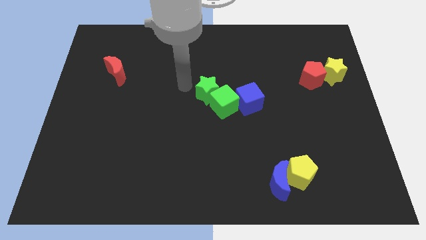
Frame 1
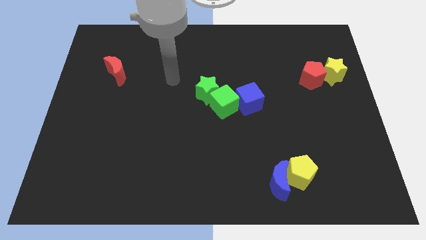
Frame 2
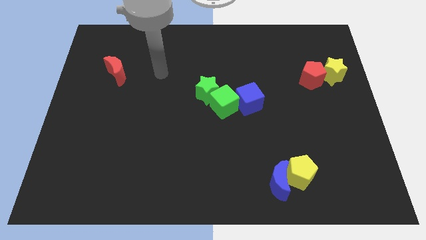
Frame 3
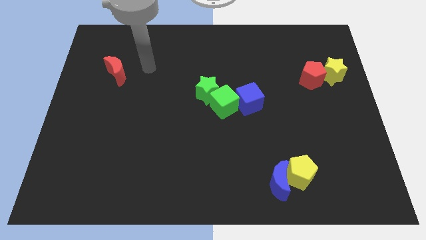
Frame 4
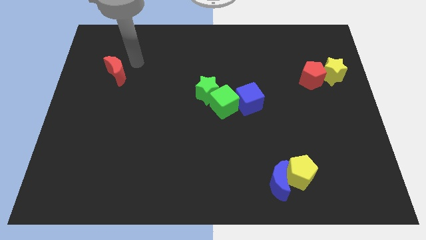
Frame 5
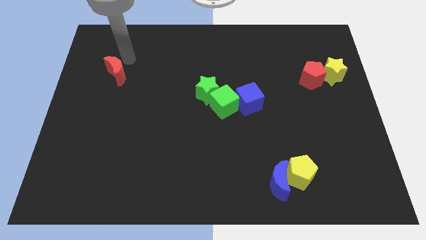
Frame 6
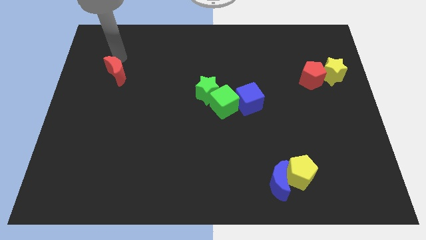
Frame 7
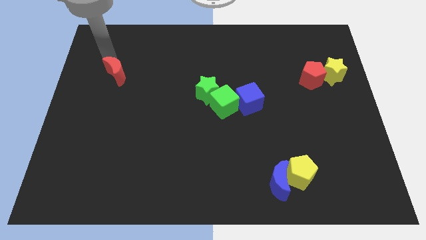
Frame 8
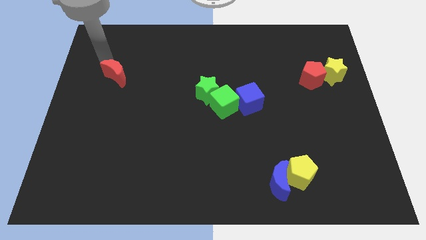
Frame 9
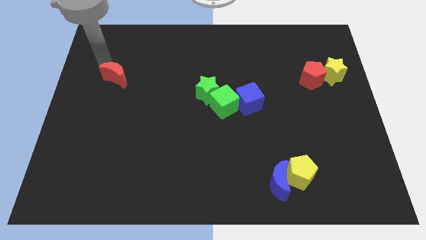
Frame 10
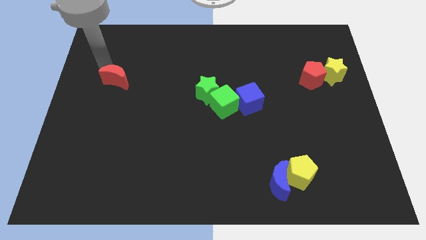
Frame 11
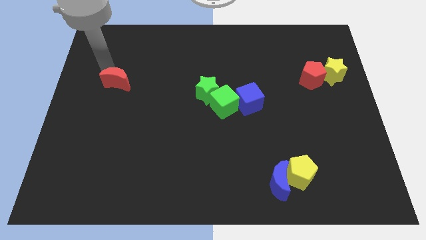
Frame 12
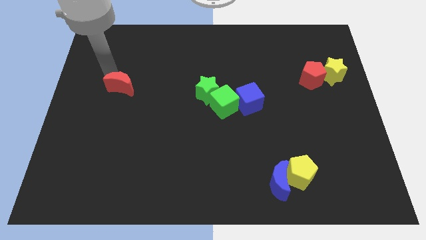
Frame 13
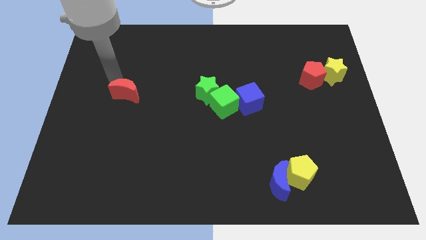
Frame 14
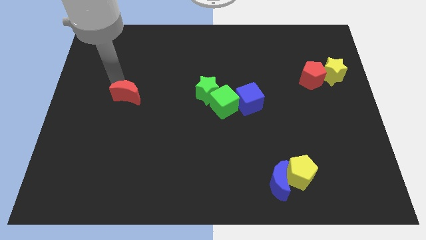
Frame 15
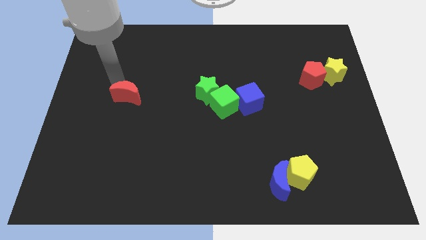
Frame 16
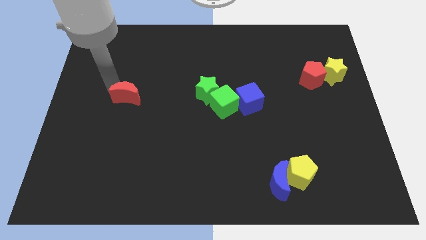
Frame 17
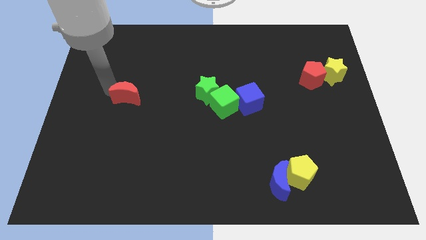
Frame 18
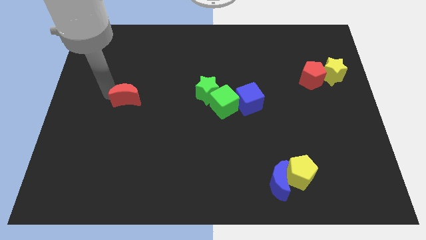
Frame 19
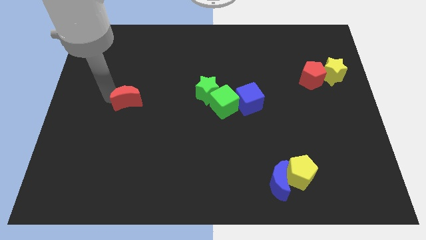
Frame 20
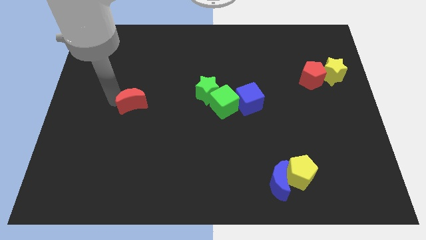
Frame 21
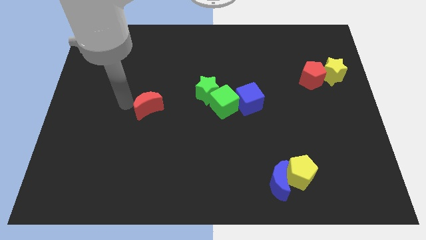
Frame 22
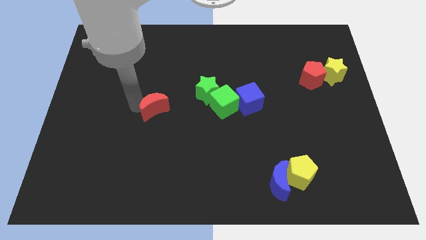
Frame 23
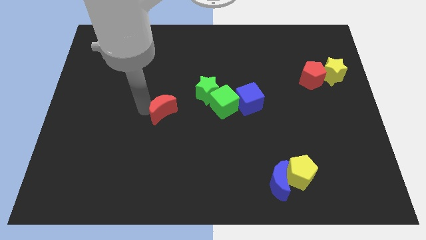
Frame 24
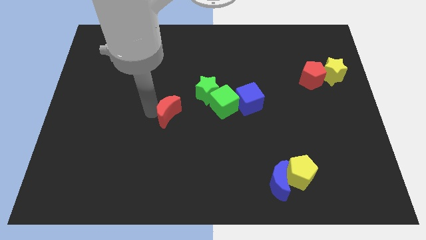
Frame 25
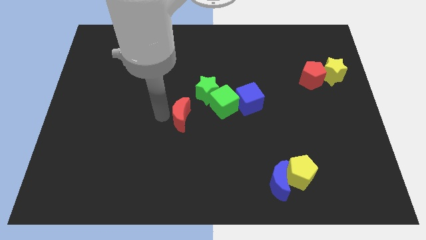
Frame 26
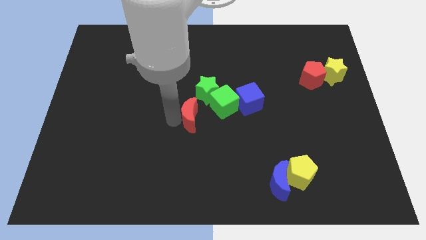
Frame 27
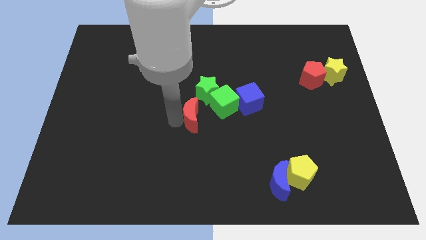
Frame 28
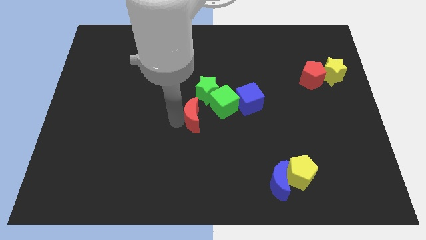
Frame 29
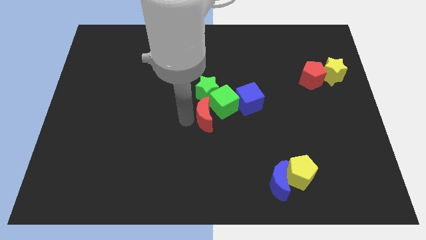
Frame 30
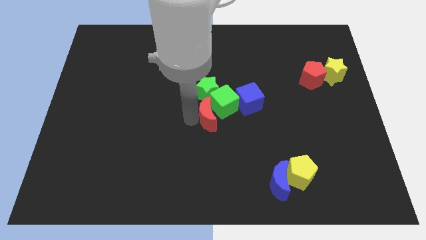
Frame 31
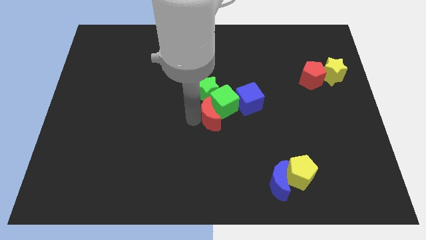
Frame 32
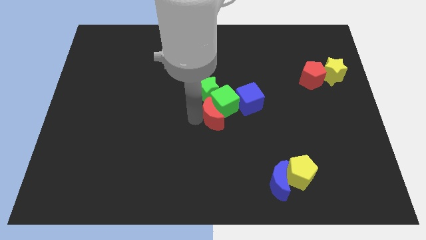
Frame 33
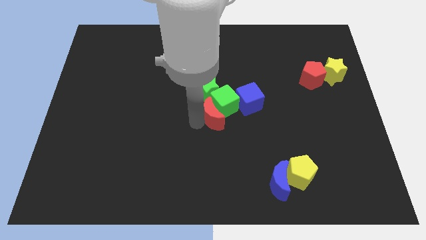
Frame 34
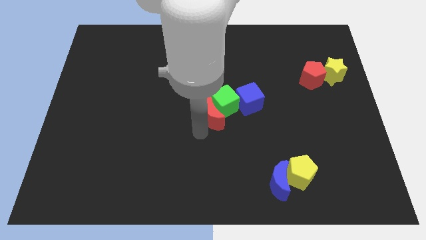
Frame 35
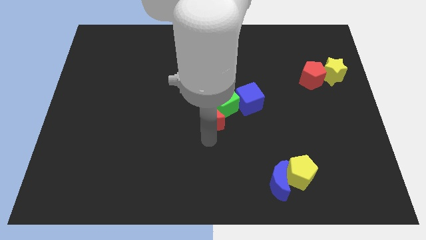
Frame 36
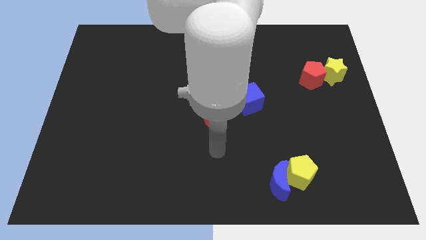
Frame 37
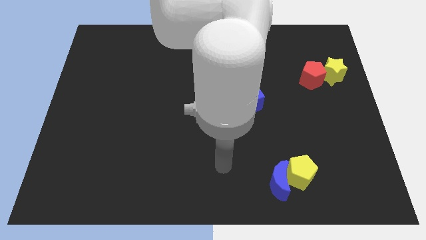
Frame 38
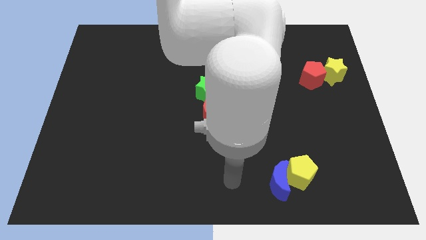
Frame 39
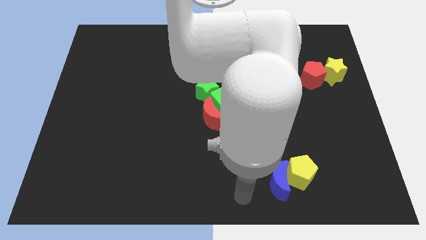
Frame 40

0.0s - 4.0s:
place red crescent into green cube

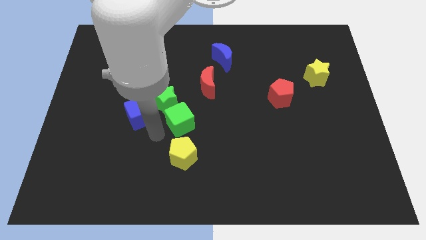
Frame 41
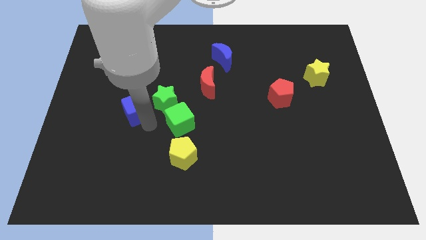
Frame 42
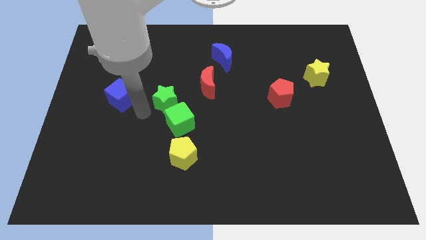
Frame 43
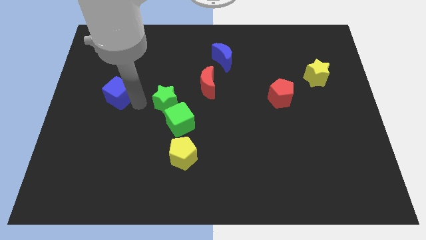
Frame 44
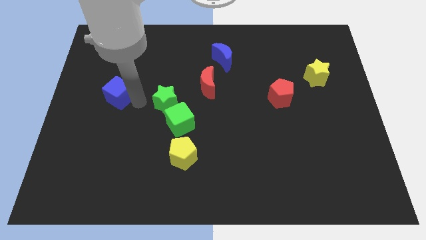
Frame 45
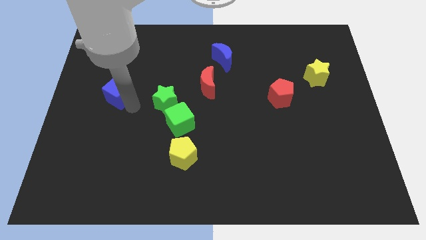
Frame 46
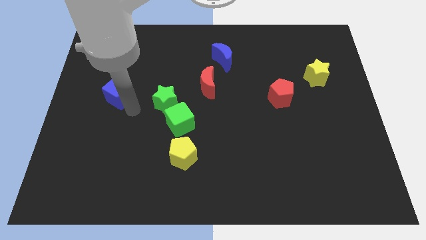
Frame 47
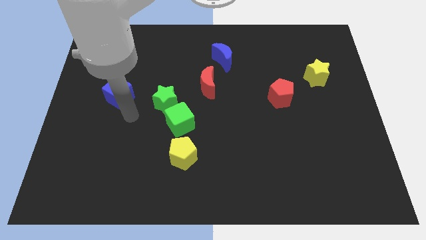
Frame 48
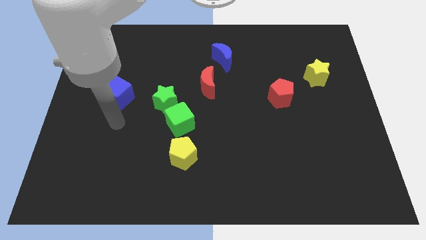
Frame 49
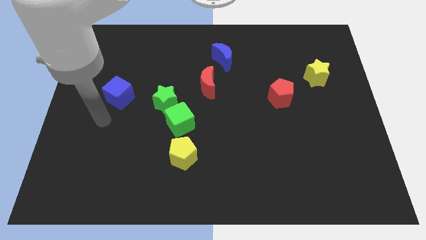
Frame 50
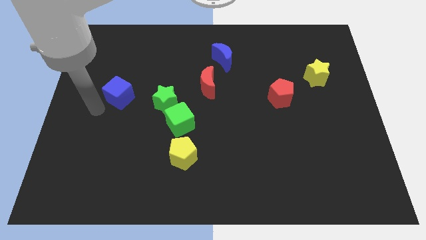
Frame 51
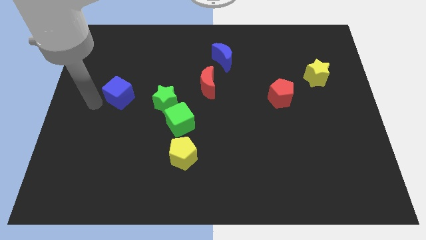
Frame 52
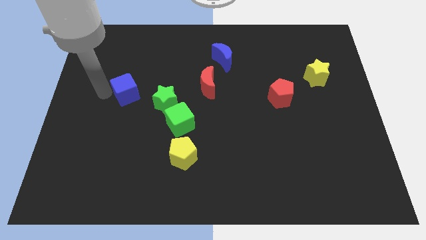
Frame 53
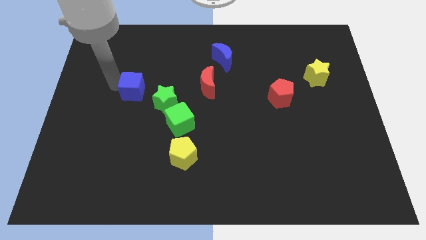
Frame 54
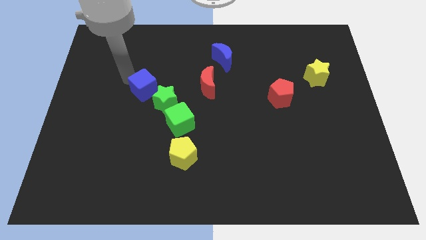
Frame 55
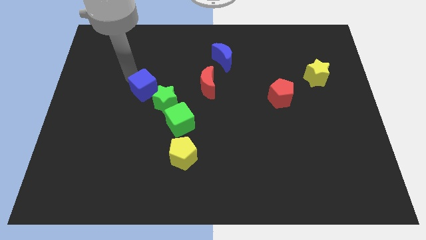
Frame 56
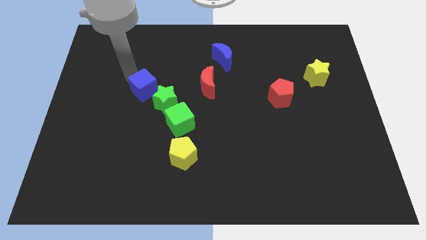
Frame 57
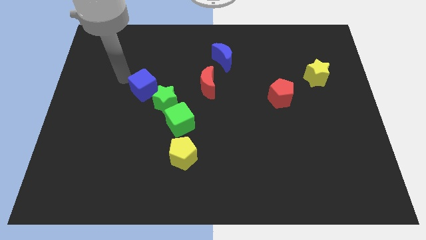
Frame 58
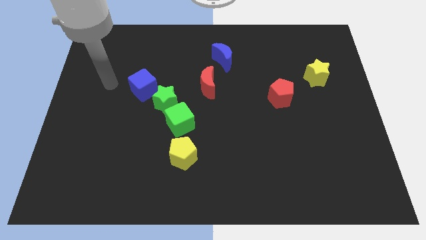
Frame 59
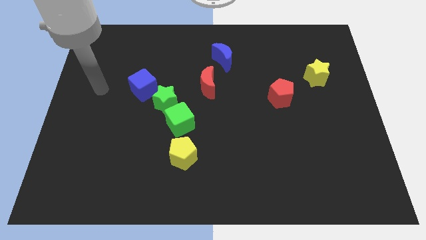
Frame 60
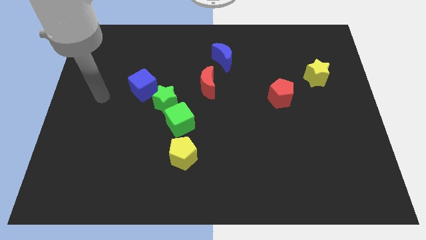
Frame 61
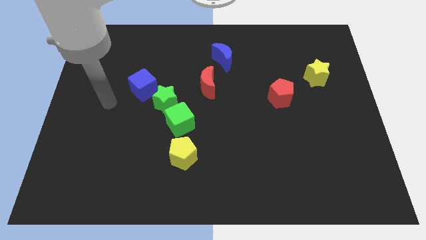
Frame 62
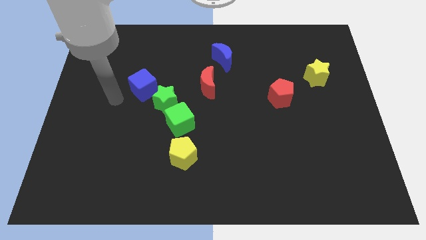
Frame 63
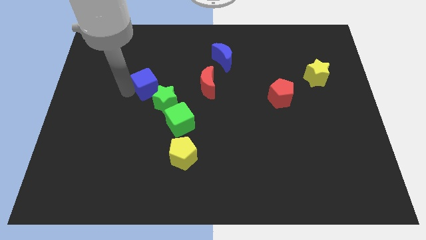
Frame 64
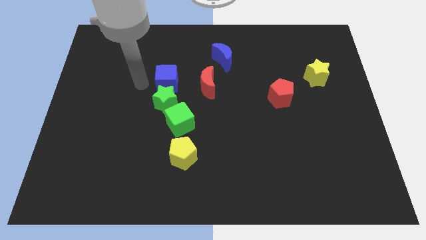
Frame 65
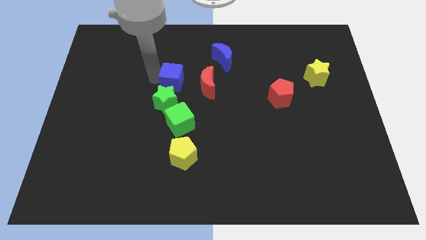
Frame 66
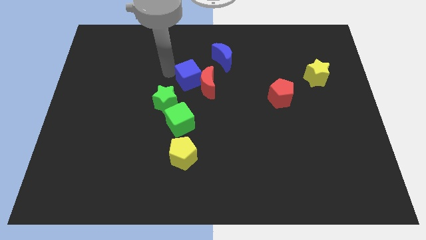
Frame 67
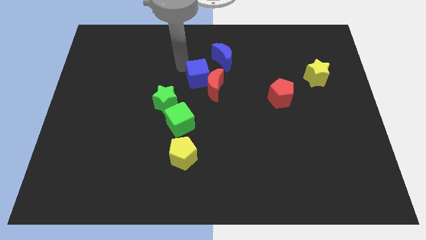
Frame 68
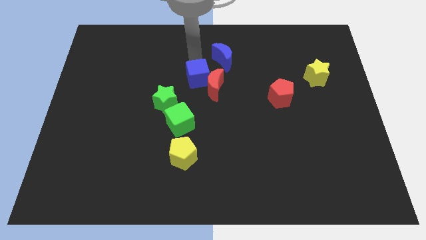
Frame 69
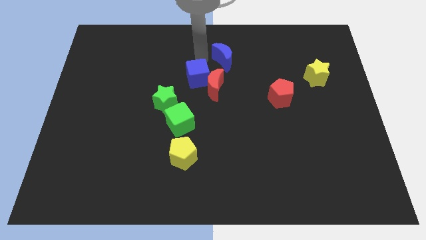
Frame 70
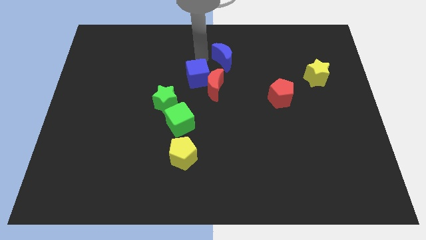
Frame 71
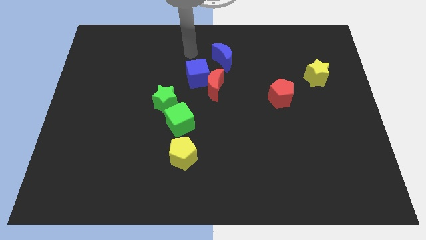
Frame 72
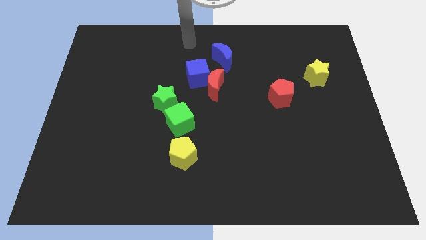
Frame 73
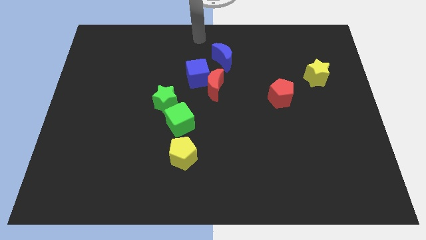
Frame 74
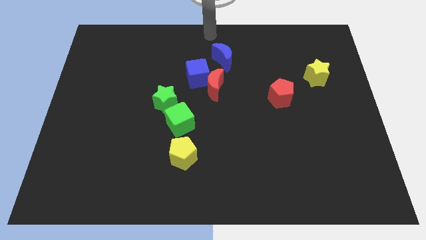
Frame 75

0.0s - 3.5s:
push the blue cube into the red moon

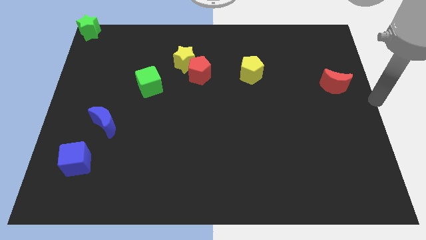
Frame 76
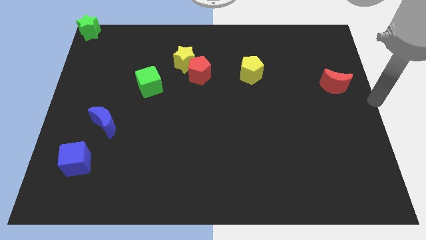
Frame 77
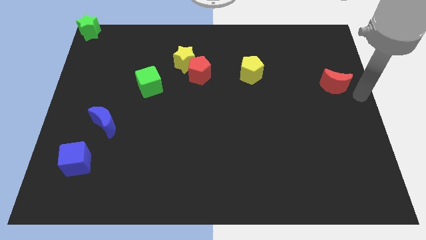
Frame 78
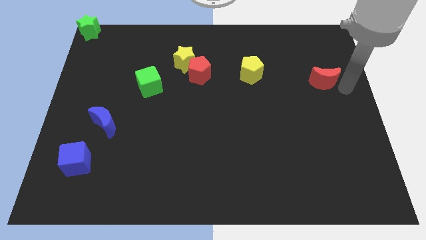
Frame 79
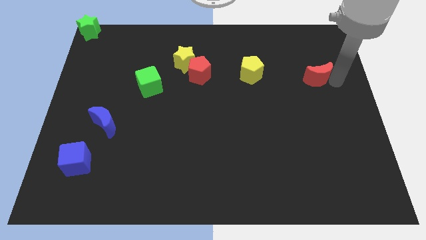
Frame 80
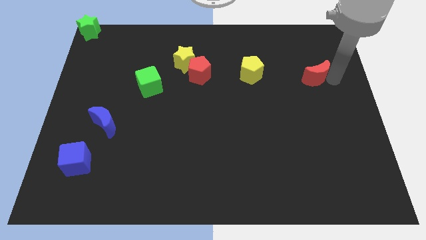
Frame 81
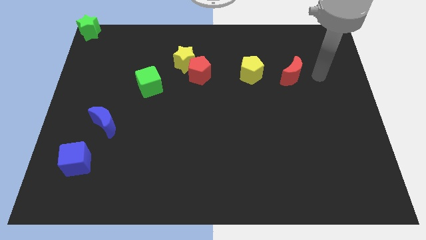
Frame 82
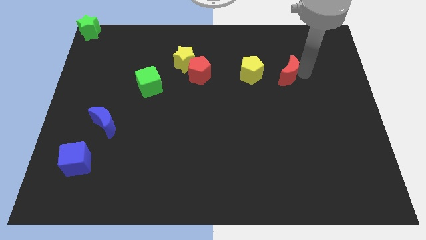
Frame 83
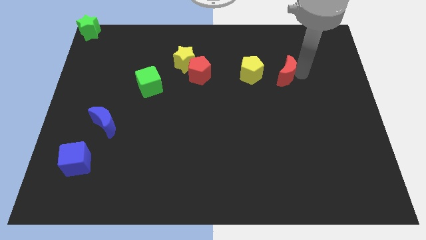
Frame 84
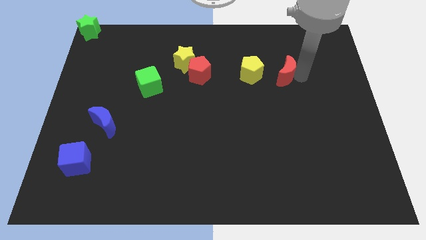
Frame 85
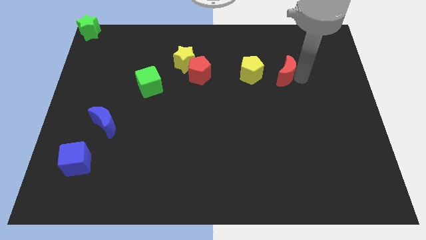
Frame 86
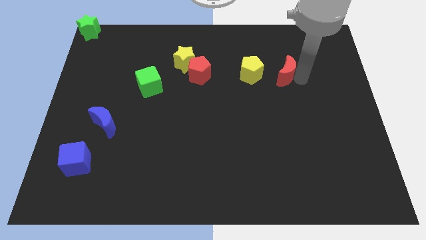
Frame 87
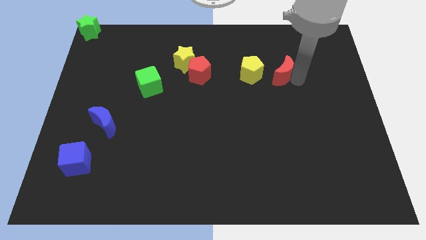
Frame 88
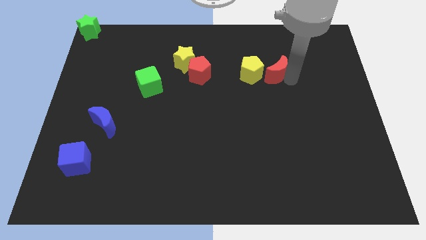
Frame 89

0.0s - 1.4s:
push the red moon closer to the yellow pentagon

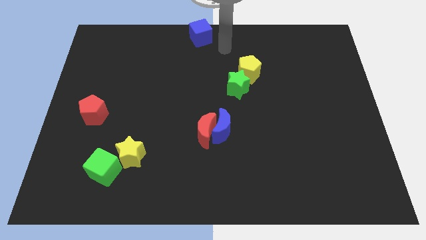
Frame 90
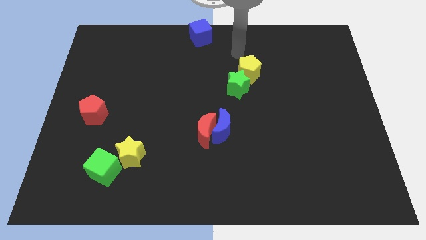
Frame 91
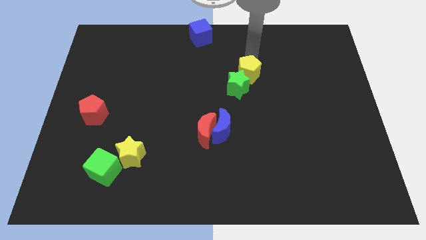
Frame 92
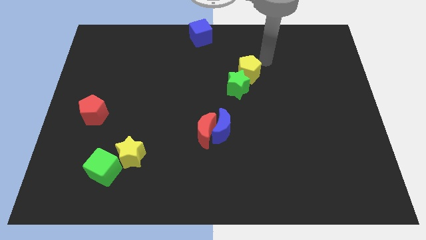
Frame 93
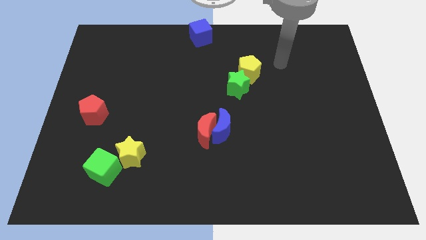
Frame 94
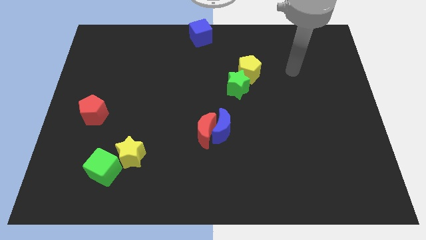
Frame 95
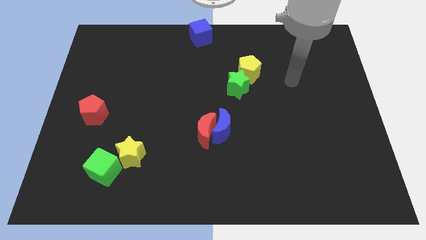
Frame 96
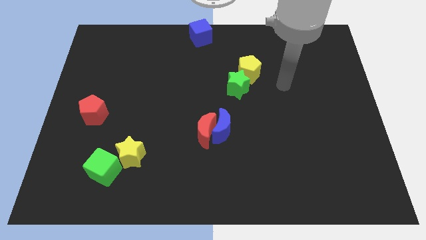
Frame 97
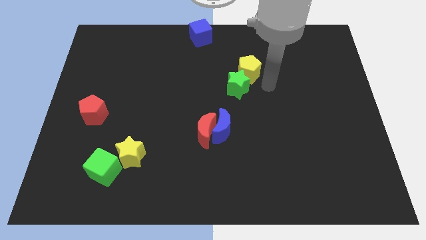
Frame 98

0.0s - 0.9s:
place your arm to the right of yellow pentagon
